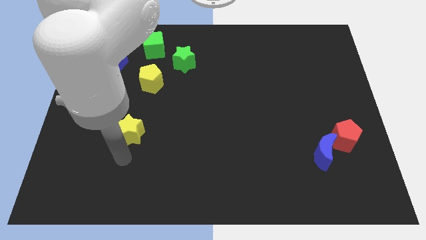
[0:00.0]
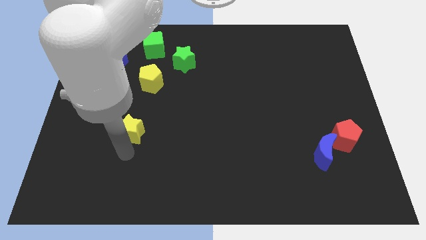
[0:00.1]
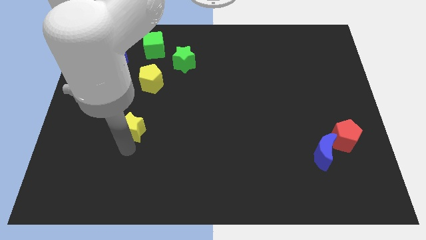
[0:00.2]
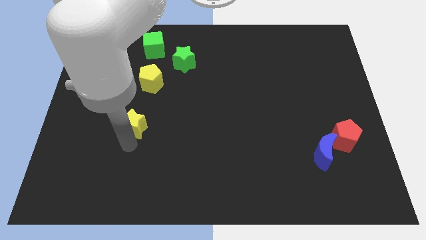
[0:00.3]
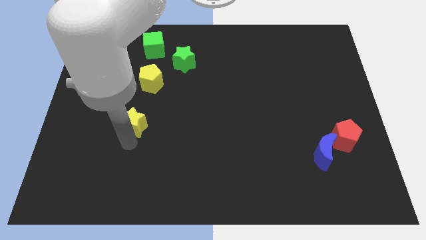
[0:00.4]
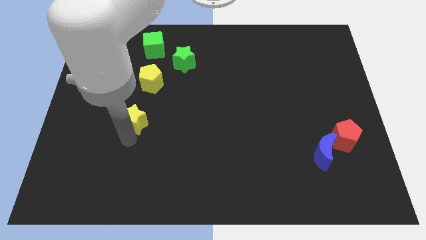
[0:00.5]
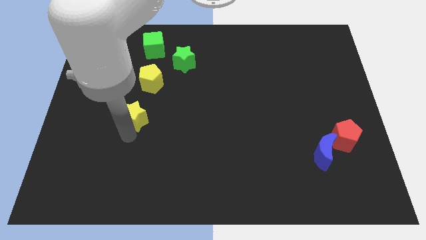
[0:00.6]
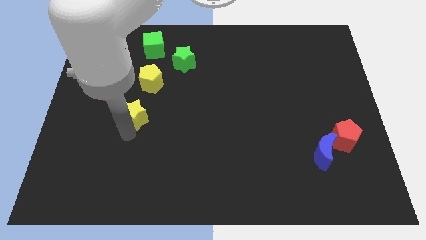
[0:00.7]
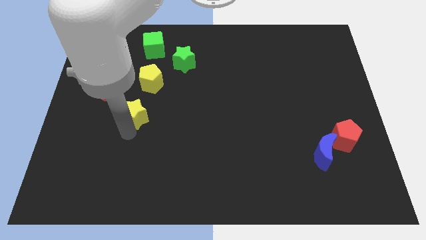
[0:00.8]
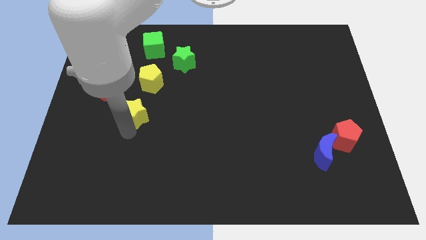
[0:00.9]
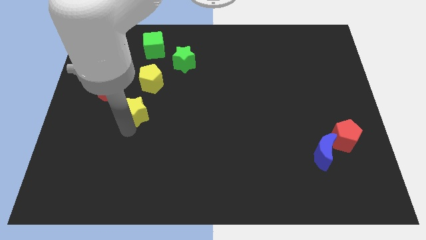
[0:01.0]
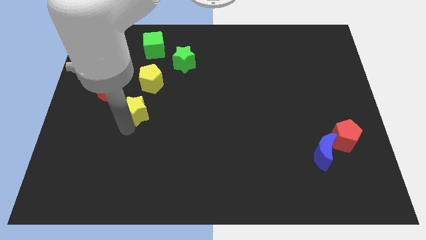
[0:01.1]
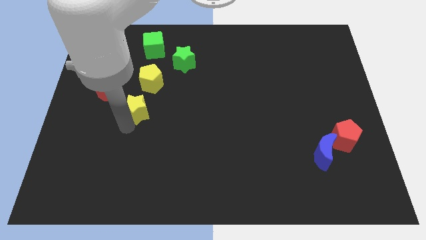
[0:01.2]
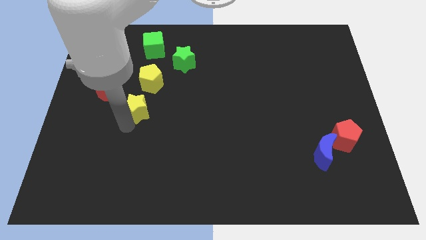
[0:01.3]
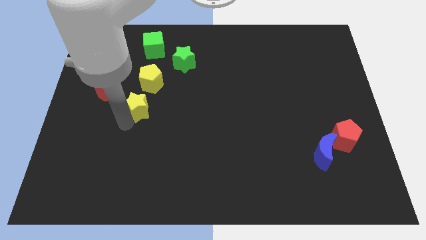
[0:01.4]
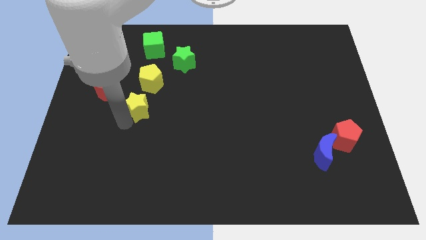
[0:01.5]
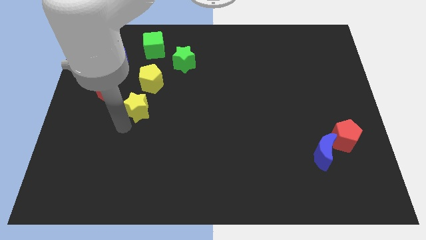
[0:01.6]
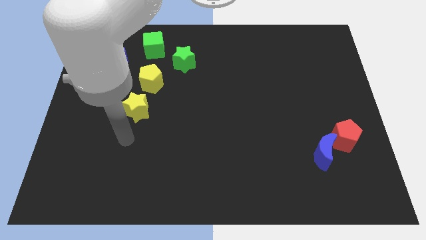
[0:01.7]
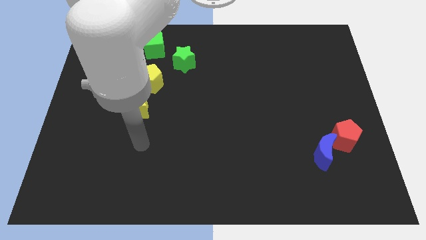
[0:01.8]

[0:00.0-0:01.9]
place yellow star diagonal to red pentagon

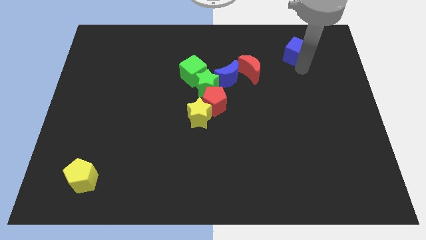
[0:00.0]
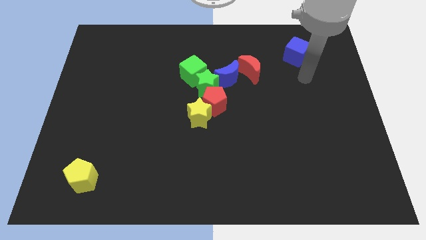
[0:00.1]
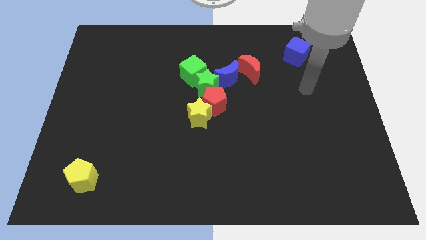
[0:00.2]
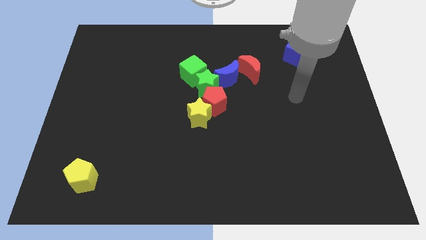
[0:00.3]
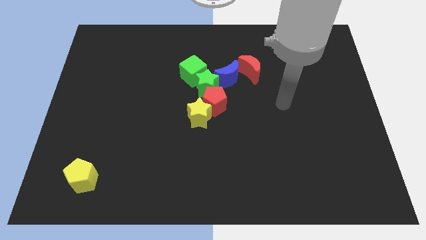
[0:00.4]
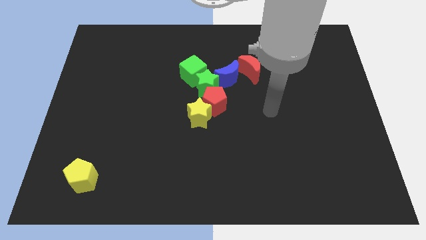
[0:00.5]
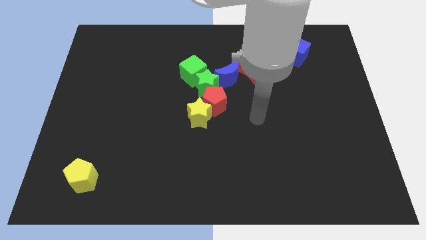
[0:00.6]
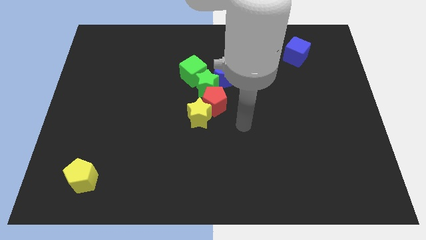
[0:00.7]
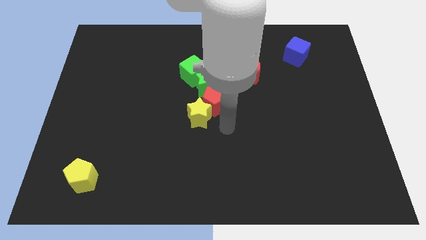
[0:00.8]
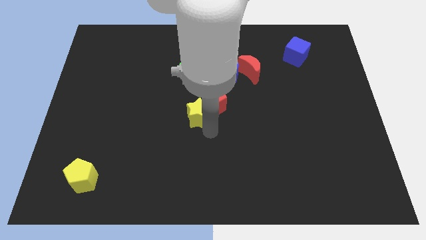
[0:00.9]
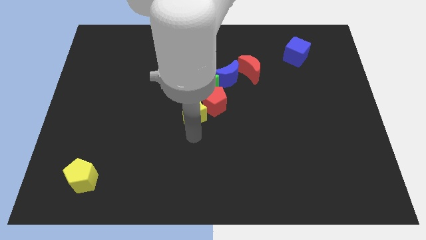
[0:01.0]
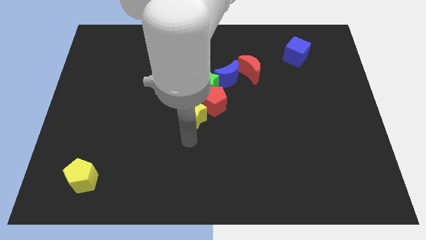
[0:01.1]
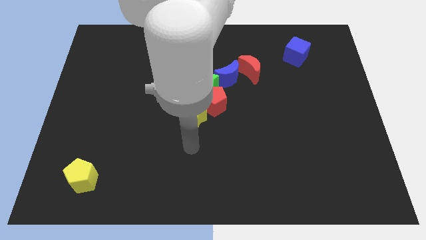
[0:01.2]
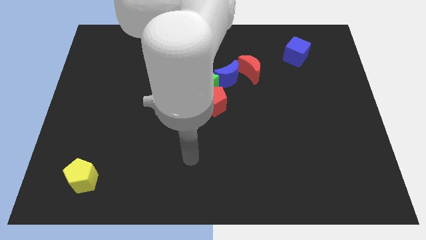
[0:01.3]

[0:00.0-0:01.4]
slightly push the yellow star to the left side

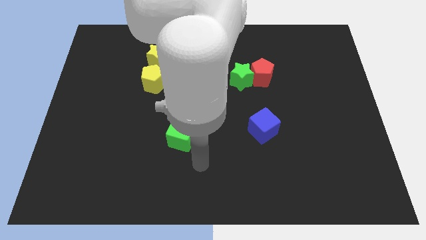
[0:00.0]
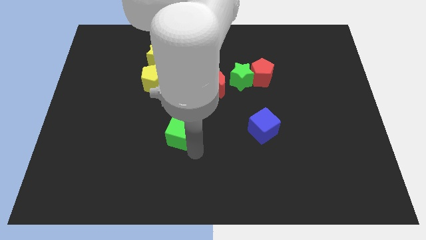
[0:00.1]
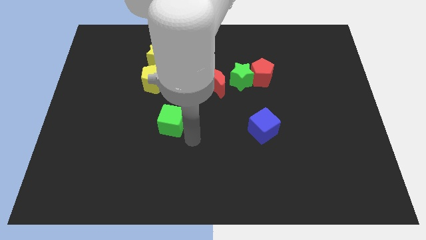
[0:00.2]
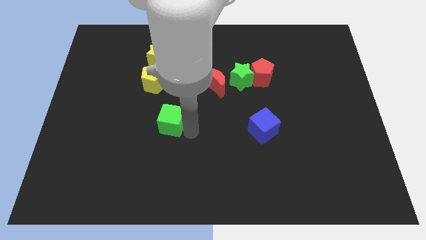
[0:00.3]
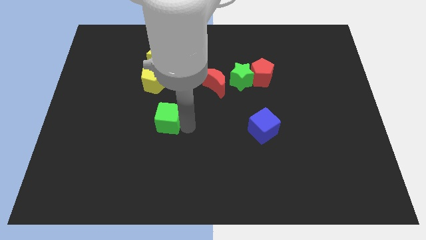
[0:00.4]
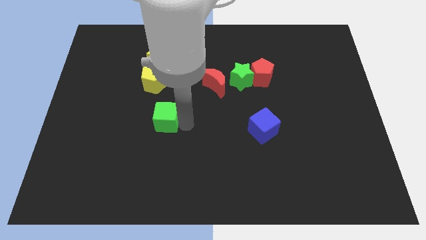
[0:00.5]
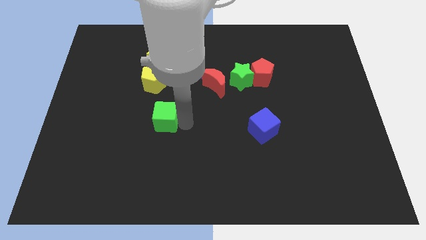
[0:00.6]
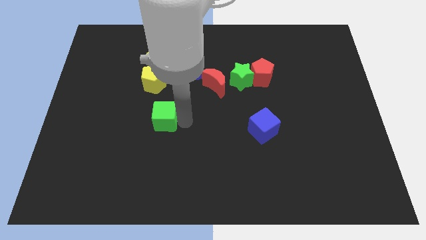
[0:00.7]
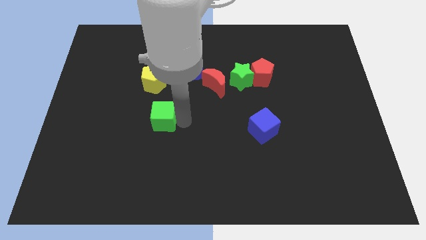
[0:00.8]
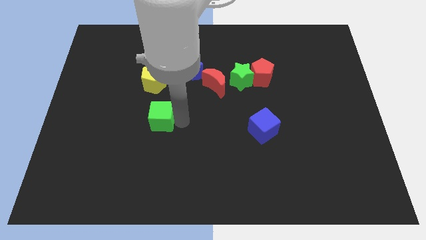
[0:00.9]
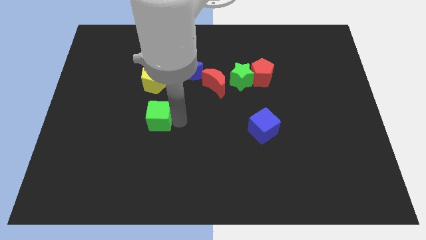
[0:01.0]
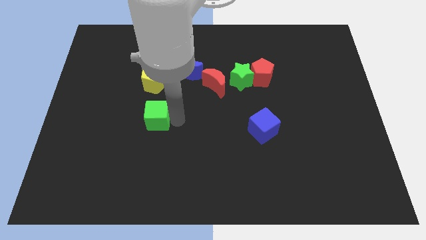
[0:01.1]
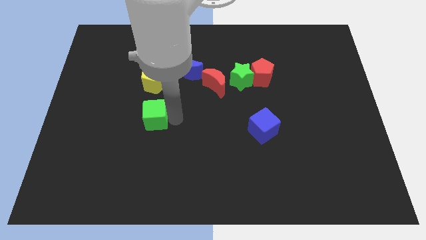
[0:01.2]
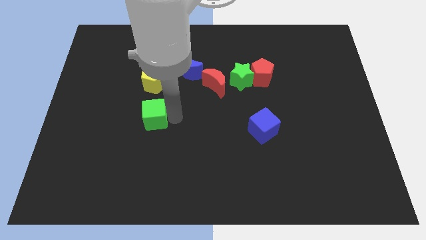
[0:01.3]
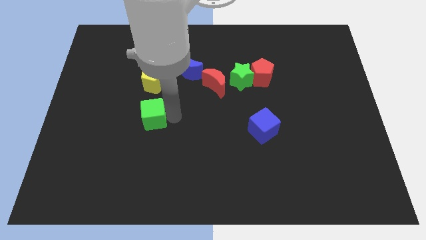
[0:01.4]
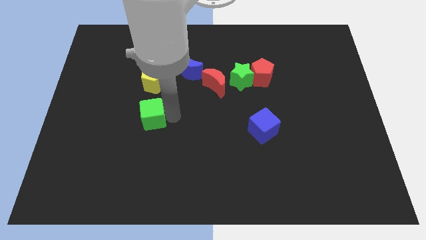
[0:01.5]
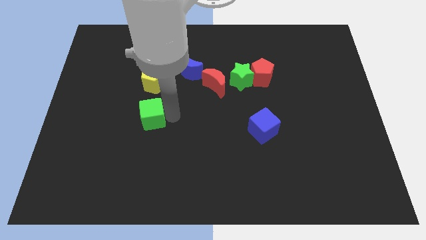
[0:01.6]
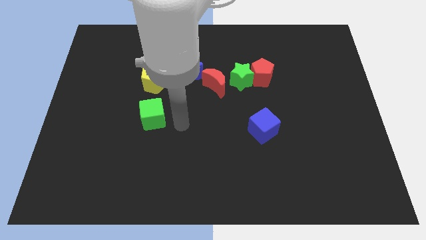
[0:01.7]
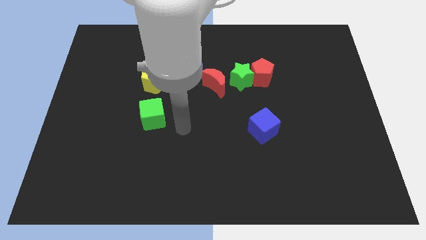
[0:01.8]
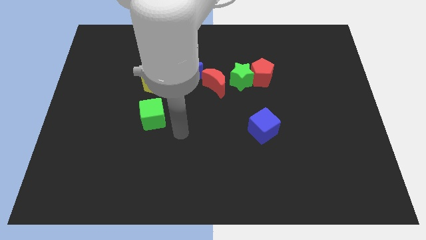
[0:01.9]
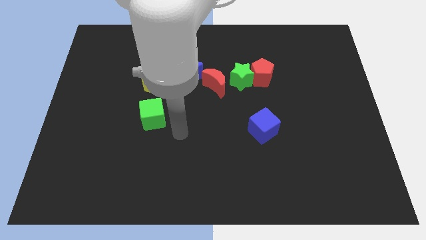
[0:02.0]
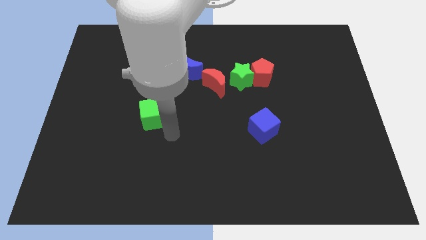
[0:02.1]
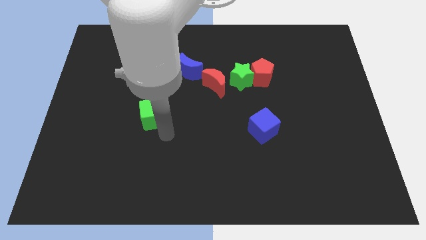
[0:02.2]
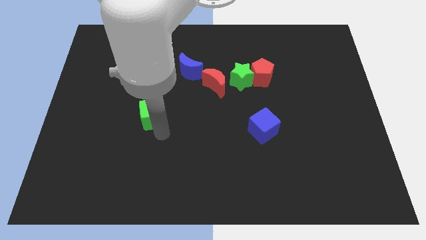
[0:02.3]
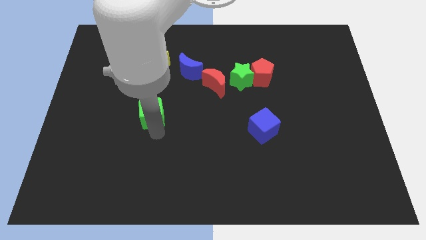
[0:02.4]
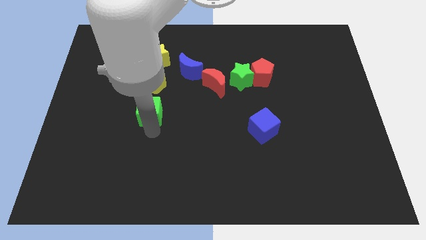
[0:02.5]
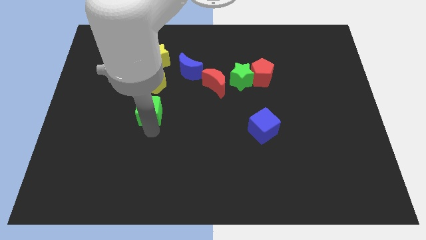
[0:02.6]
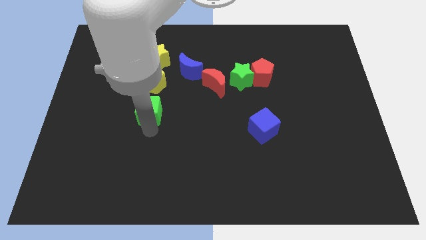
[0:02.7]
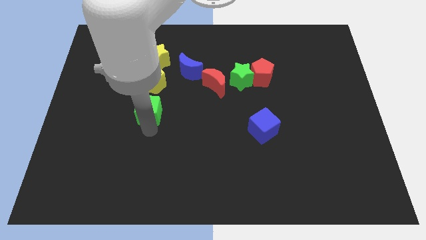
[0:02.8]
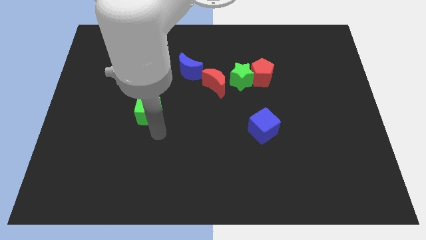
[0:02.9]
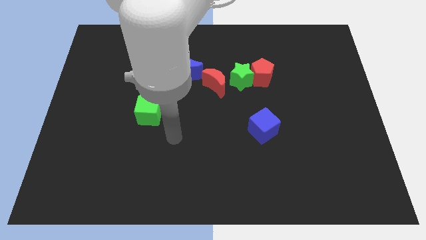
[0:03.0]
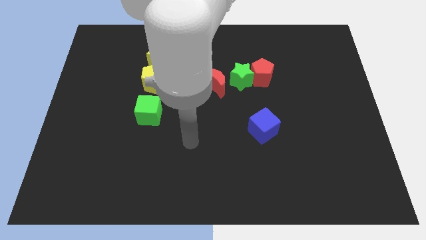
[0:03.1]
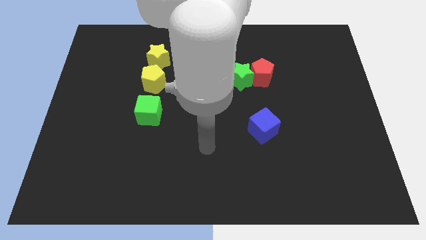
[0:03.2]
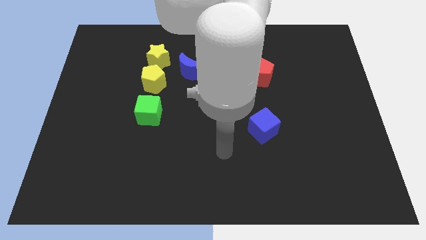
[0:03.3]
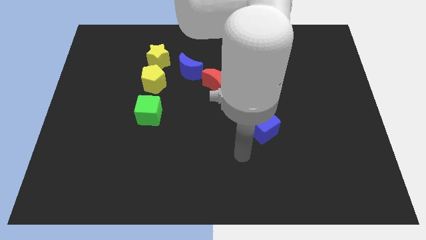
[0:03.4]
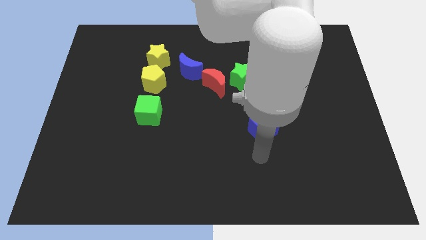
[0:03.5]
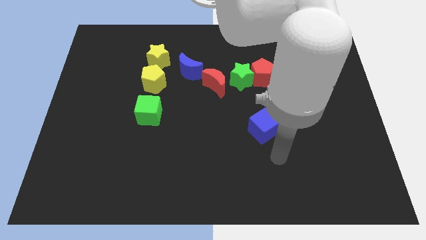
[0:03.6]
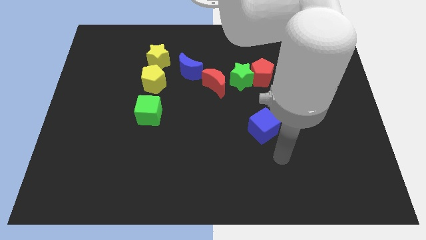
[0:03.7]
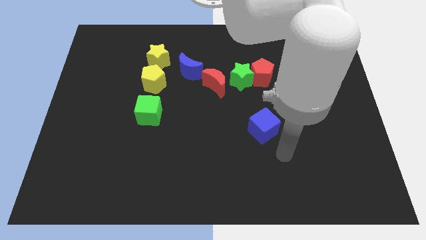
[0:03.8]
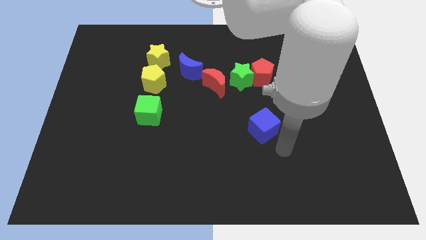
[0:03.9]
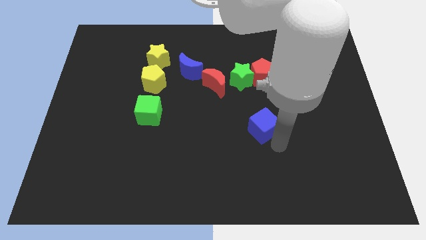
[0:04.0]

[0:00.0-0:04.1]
place green cube below yellow pentagon

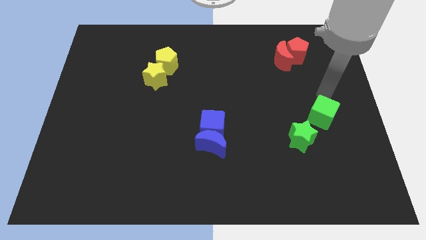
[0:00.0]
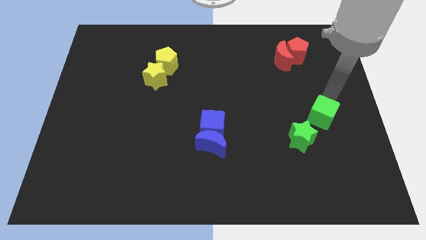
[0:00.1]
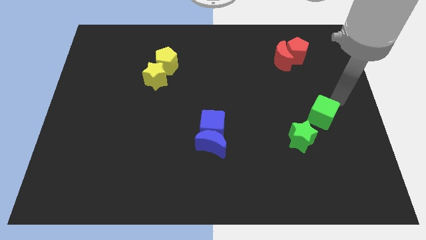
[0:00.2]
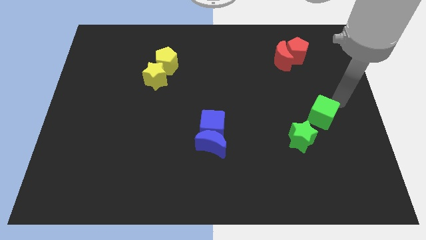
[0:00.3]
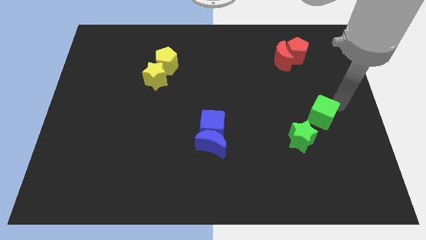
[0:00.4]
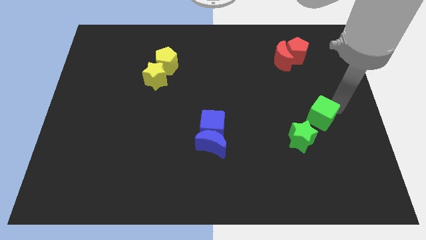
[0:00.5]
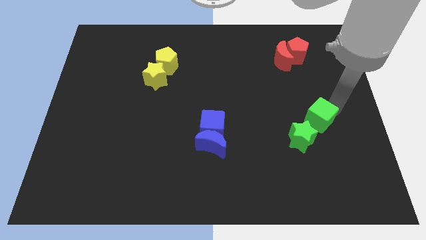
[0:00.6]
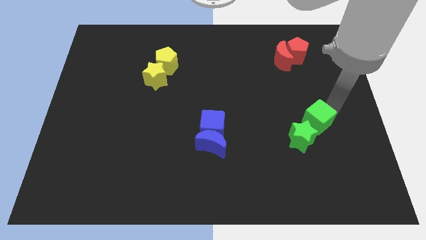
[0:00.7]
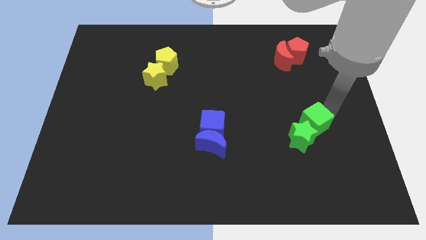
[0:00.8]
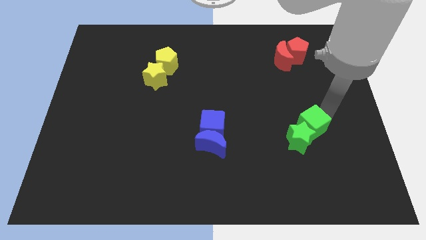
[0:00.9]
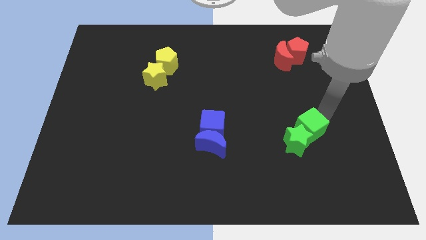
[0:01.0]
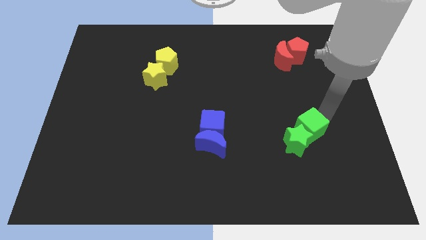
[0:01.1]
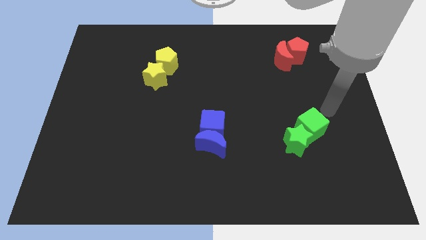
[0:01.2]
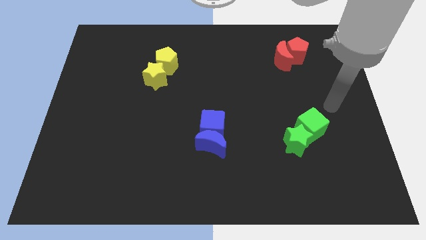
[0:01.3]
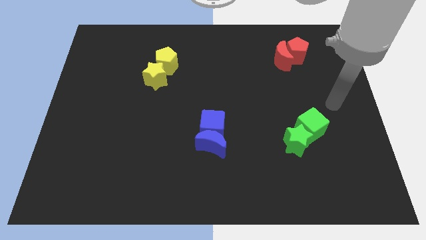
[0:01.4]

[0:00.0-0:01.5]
push the green cube into the green star
